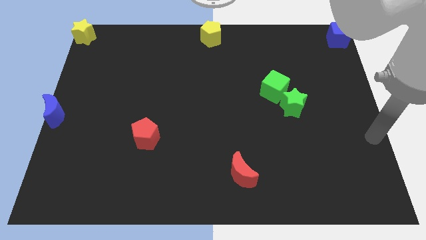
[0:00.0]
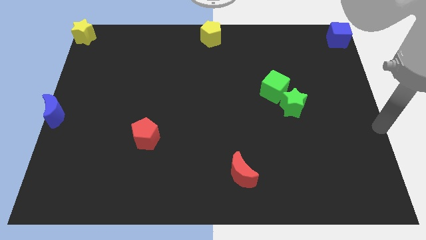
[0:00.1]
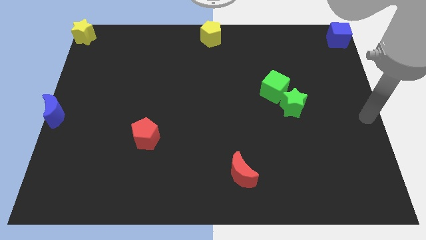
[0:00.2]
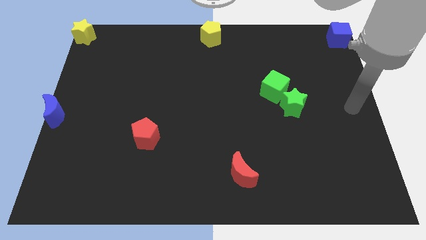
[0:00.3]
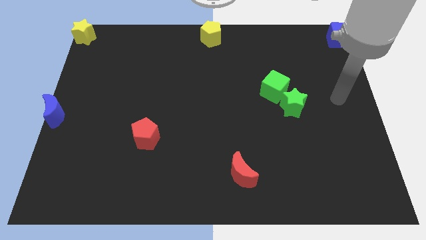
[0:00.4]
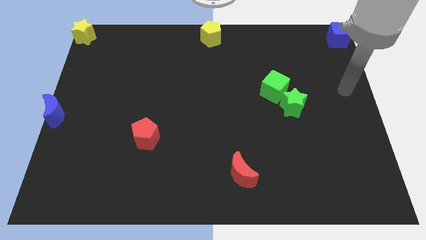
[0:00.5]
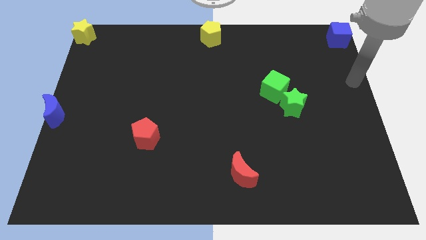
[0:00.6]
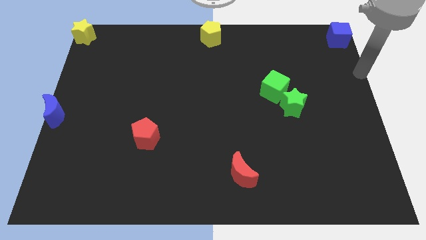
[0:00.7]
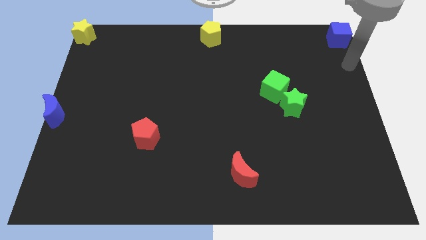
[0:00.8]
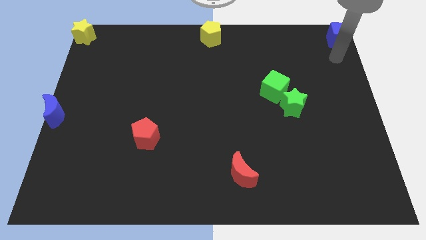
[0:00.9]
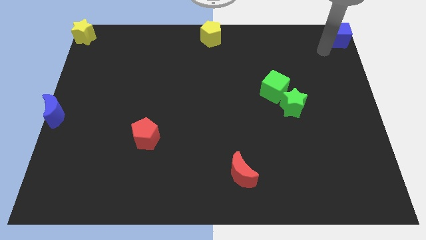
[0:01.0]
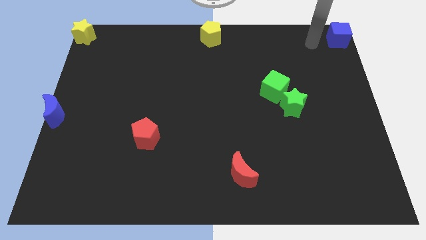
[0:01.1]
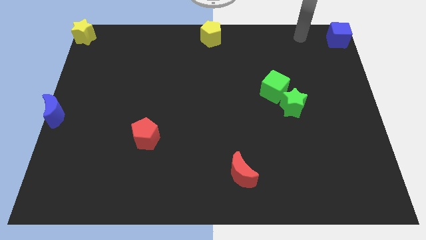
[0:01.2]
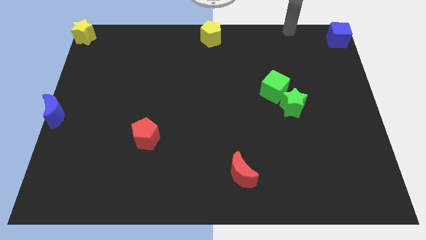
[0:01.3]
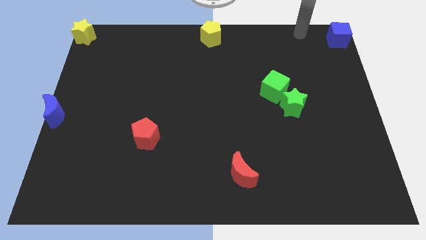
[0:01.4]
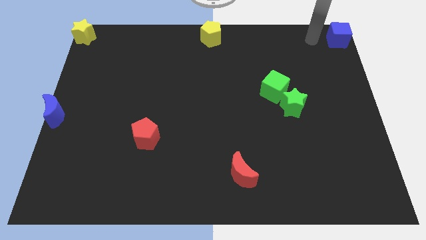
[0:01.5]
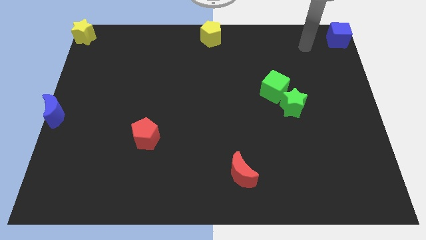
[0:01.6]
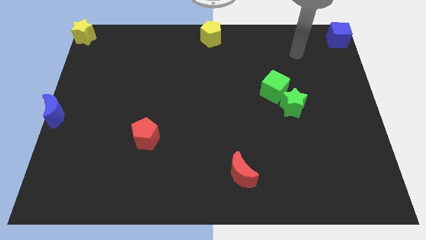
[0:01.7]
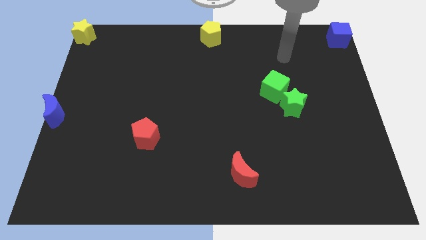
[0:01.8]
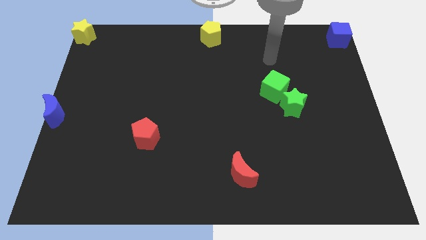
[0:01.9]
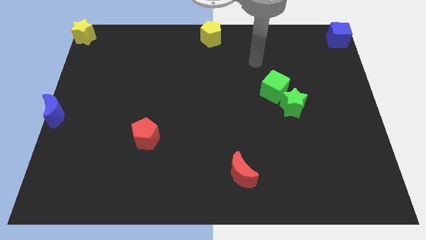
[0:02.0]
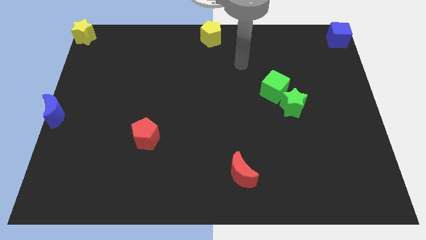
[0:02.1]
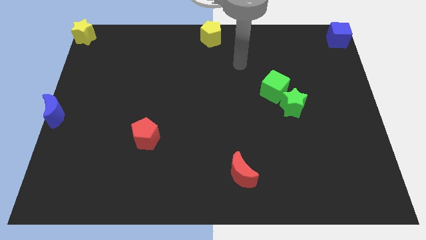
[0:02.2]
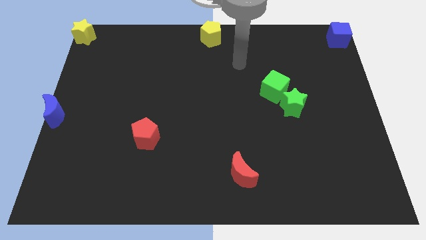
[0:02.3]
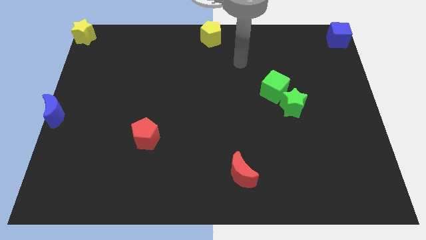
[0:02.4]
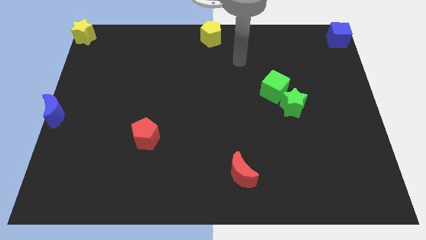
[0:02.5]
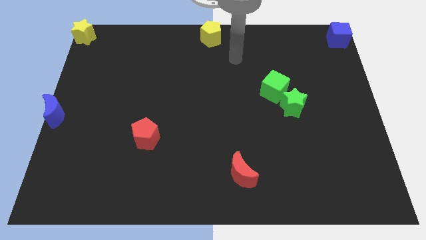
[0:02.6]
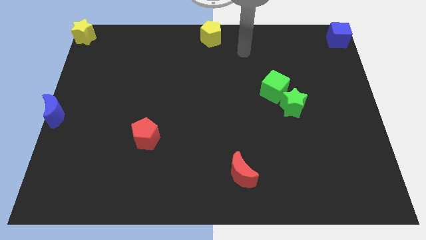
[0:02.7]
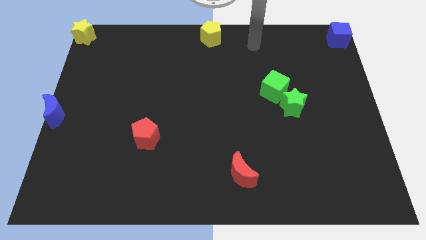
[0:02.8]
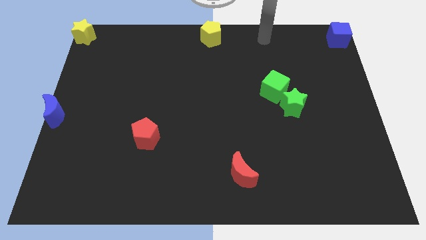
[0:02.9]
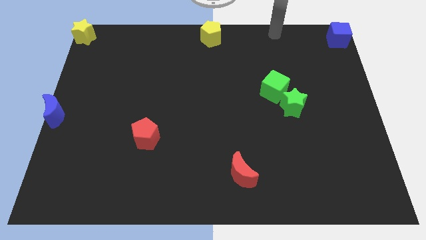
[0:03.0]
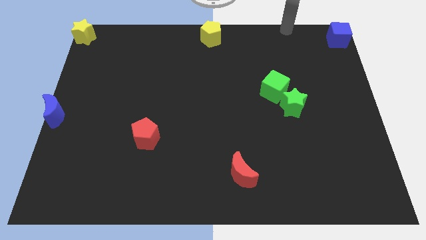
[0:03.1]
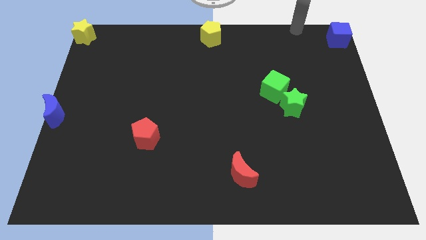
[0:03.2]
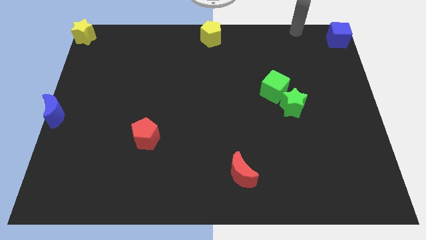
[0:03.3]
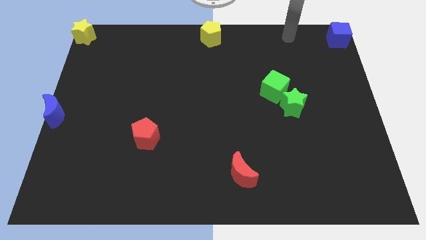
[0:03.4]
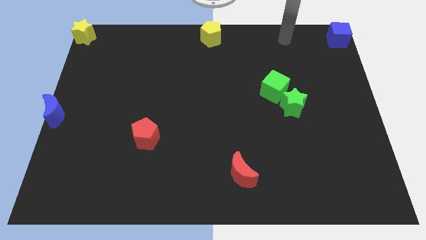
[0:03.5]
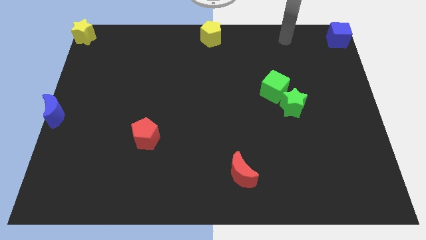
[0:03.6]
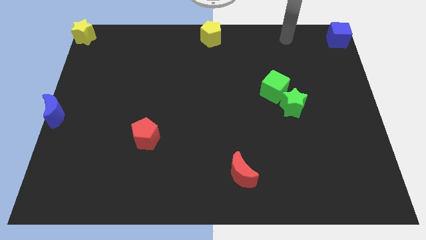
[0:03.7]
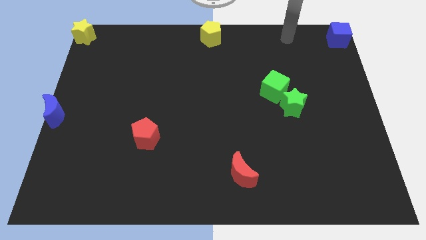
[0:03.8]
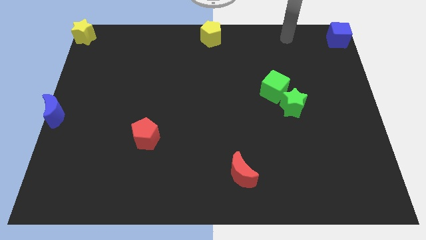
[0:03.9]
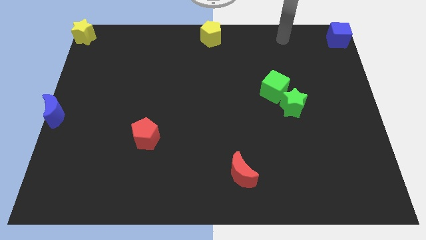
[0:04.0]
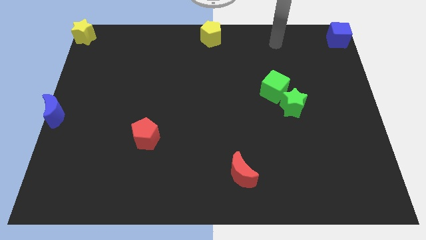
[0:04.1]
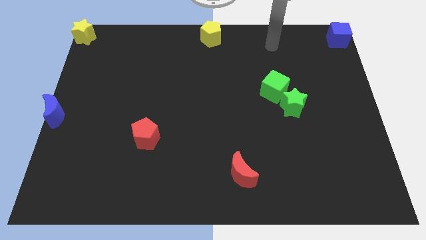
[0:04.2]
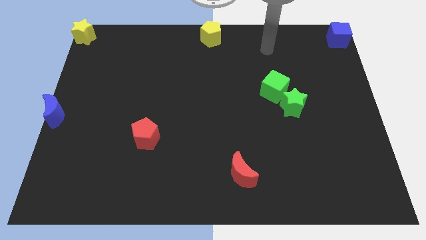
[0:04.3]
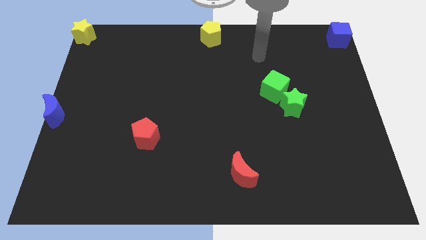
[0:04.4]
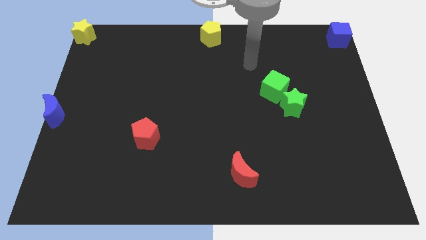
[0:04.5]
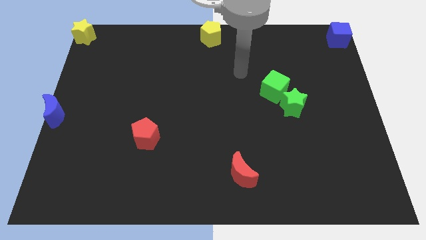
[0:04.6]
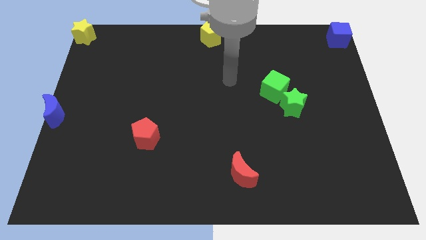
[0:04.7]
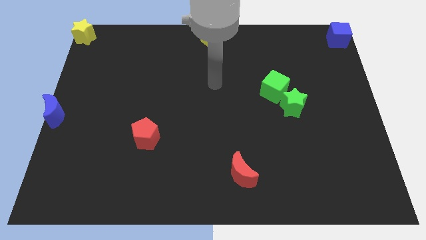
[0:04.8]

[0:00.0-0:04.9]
move your arm in the center

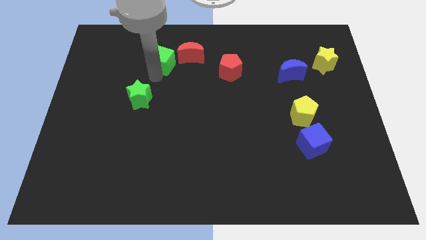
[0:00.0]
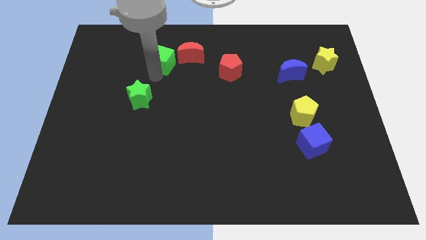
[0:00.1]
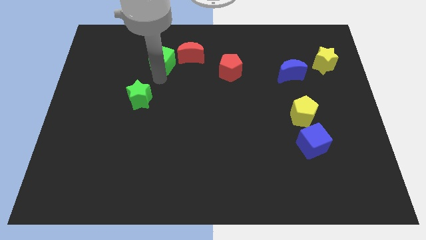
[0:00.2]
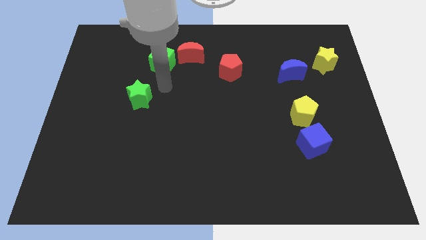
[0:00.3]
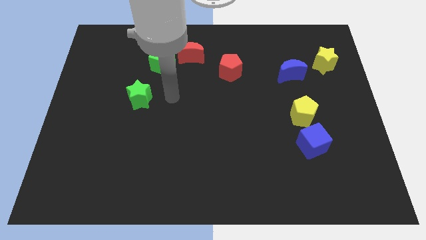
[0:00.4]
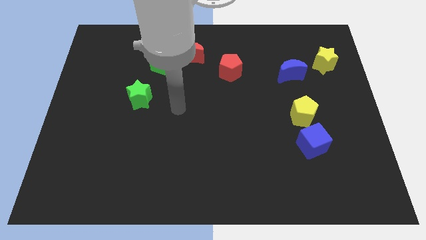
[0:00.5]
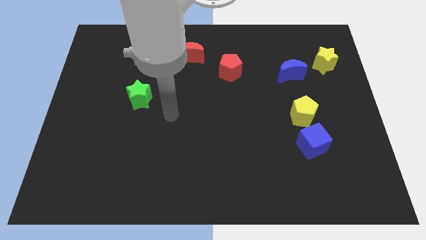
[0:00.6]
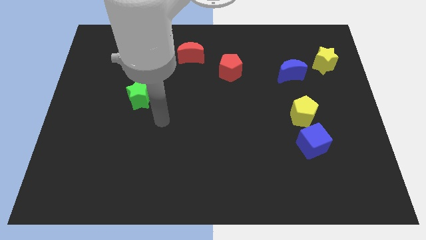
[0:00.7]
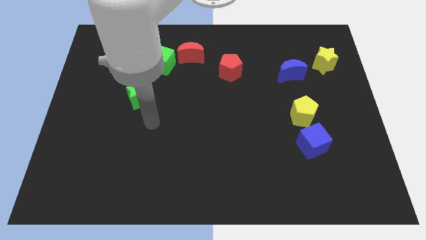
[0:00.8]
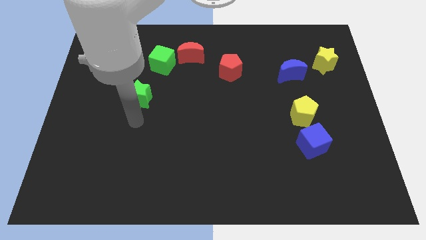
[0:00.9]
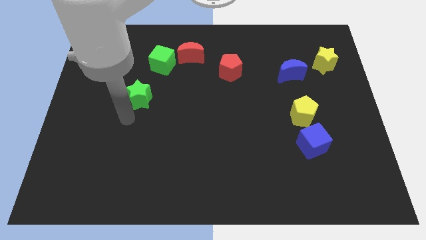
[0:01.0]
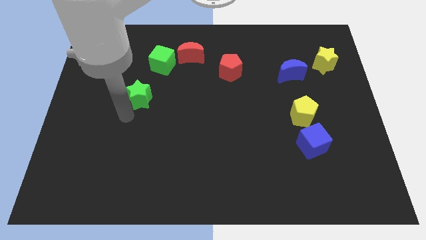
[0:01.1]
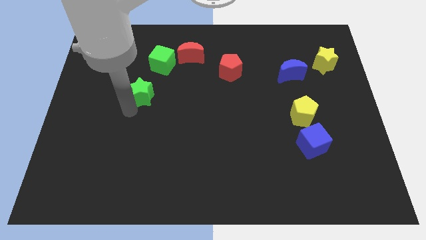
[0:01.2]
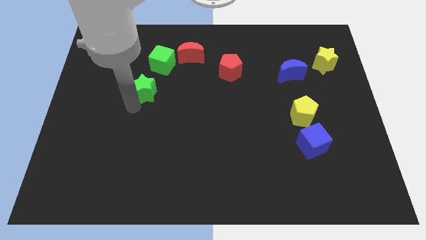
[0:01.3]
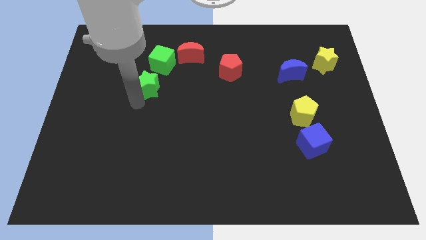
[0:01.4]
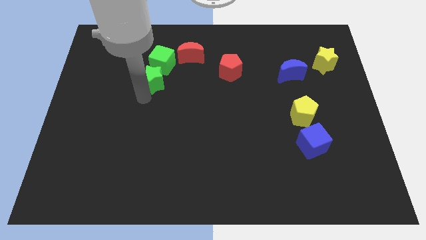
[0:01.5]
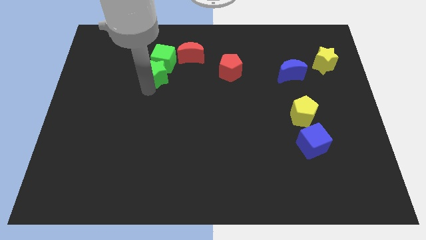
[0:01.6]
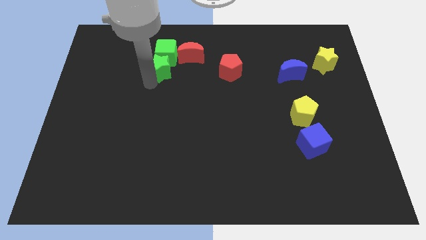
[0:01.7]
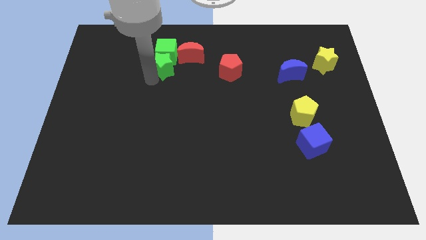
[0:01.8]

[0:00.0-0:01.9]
push the green star into the green cube

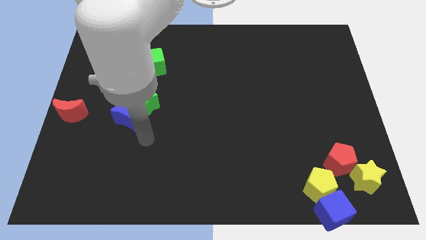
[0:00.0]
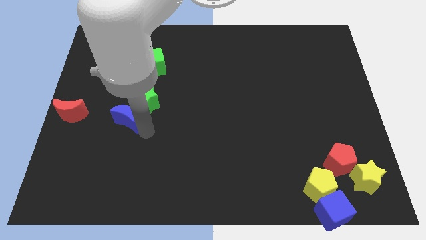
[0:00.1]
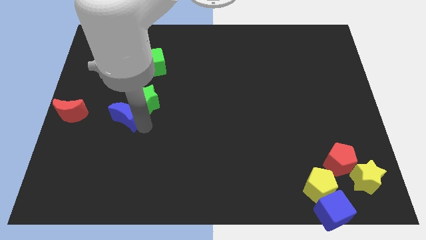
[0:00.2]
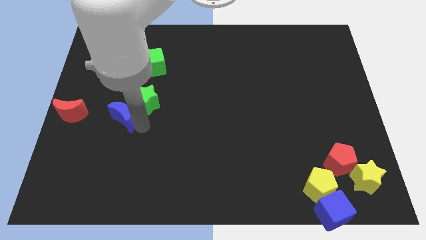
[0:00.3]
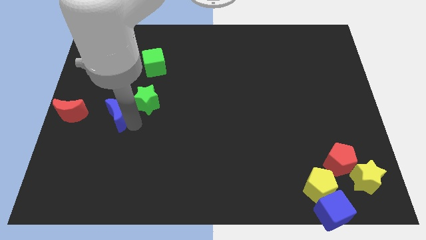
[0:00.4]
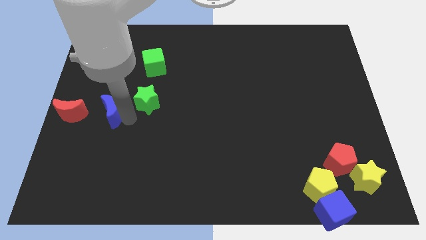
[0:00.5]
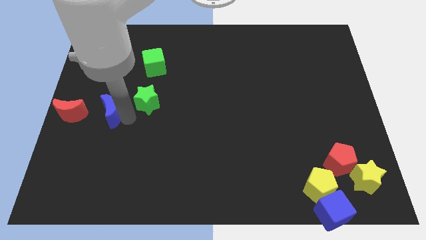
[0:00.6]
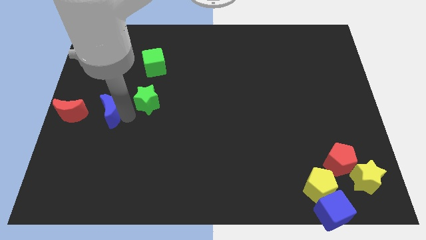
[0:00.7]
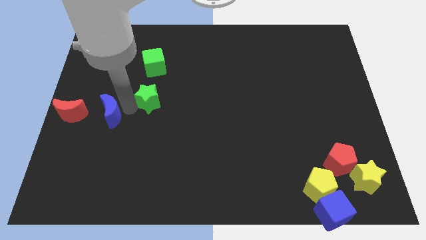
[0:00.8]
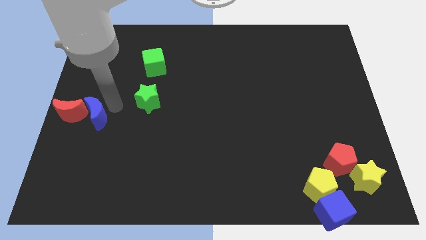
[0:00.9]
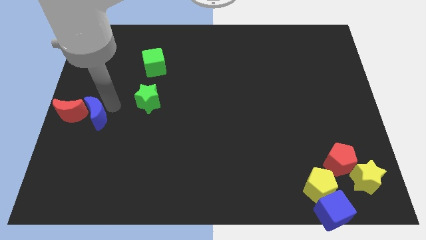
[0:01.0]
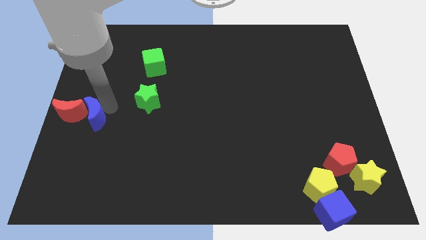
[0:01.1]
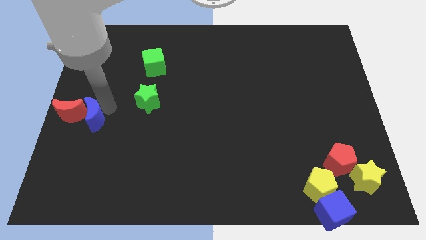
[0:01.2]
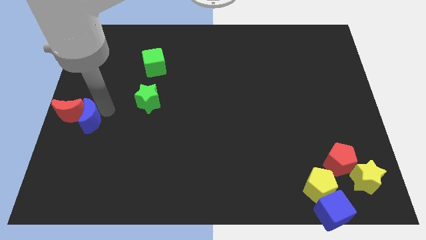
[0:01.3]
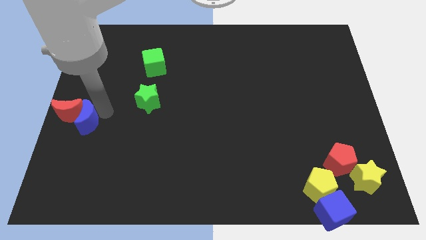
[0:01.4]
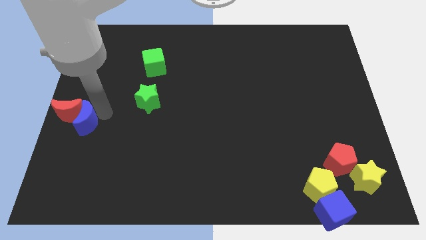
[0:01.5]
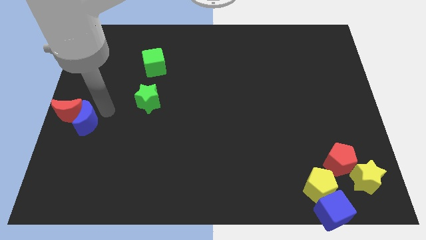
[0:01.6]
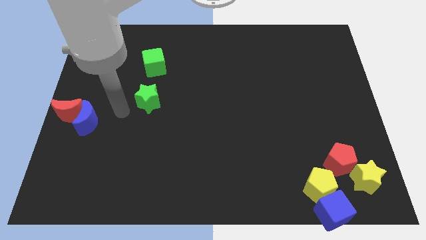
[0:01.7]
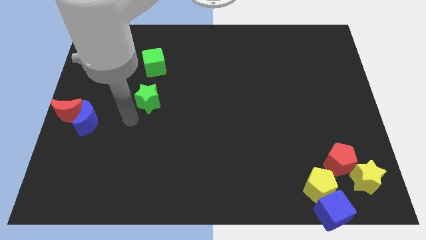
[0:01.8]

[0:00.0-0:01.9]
push the blue moon into the red moon

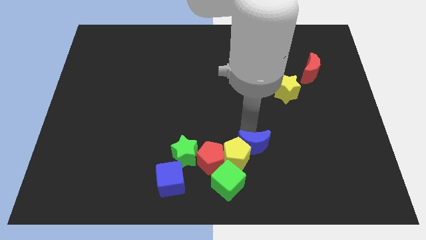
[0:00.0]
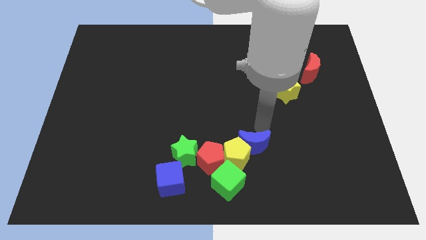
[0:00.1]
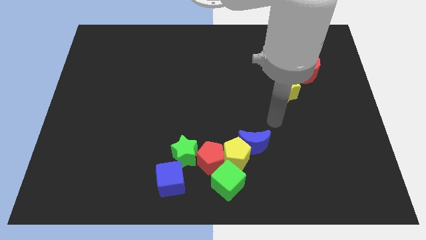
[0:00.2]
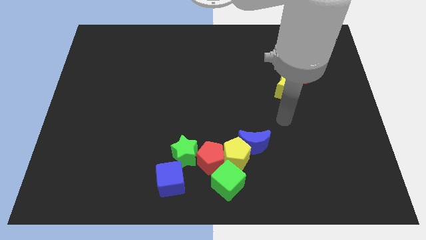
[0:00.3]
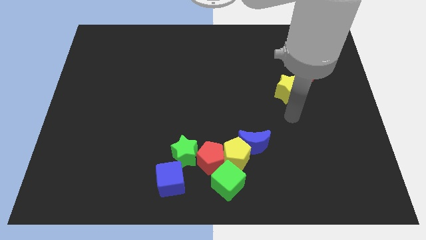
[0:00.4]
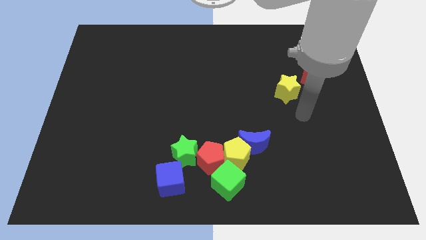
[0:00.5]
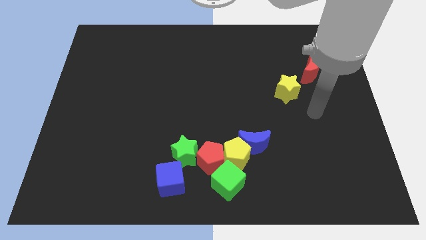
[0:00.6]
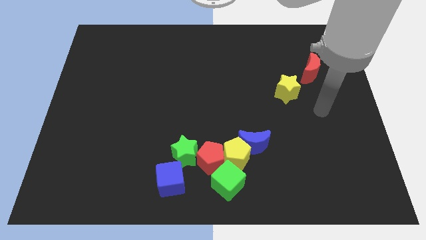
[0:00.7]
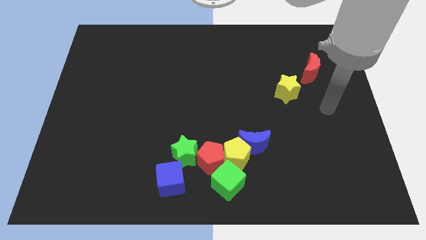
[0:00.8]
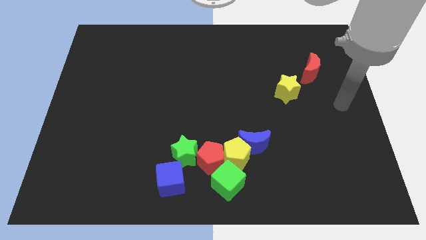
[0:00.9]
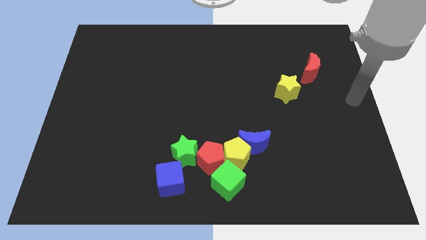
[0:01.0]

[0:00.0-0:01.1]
move yourself to the center right of the board
